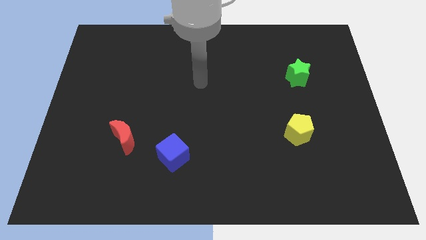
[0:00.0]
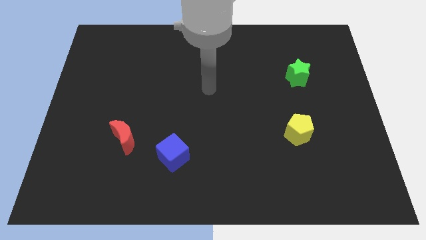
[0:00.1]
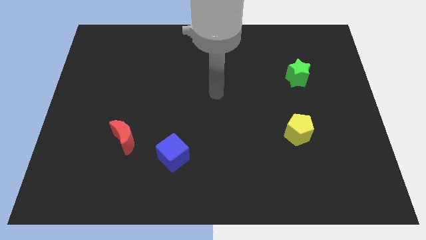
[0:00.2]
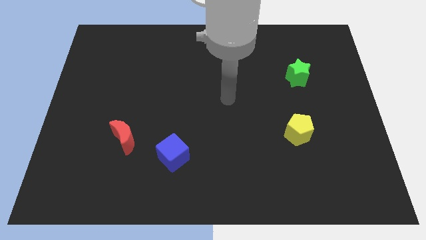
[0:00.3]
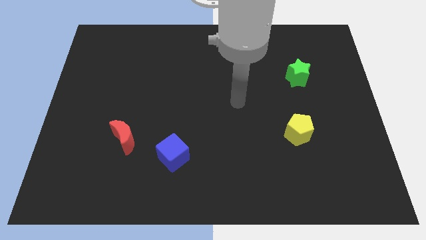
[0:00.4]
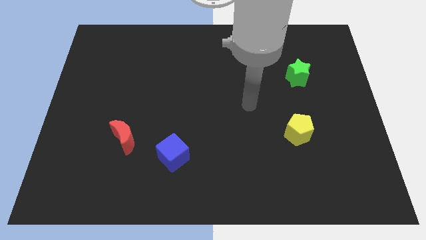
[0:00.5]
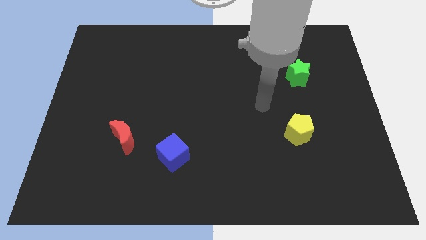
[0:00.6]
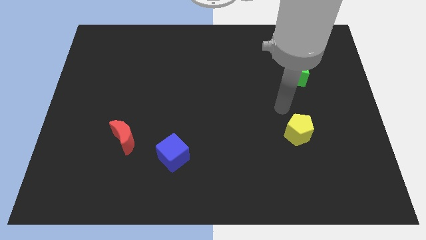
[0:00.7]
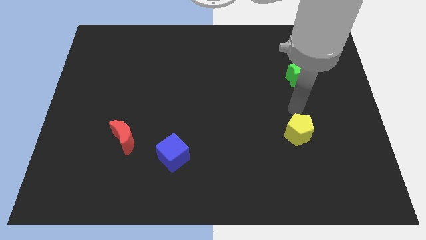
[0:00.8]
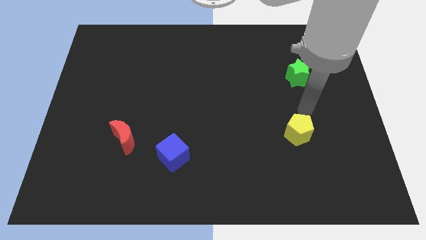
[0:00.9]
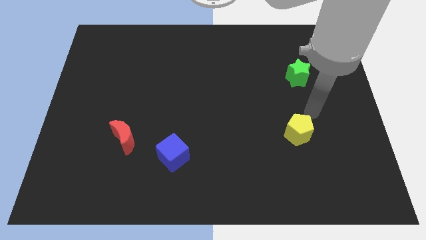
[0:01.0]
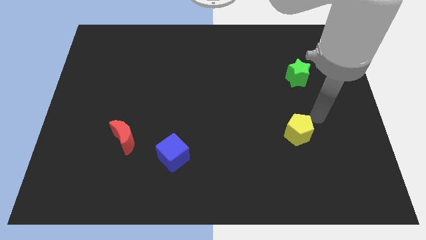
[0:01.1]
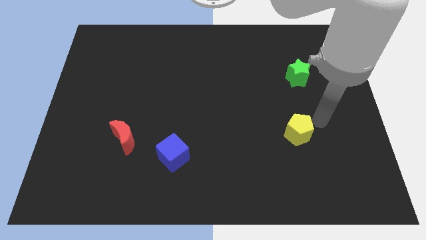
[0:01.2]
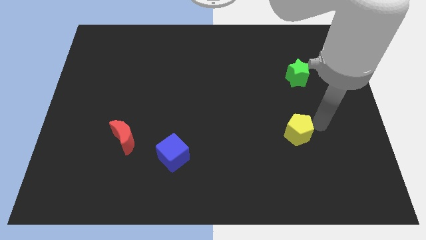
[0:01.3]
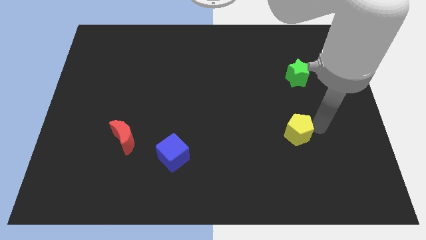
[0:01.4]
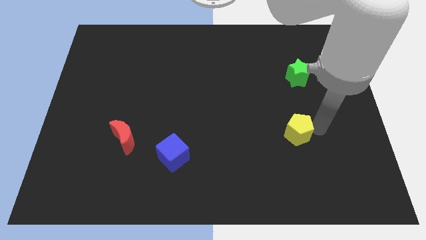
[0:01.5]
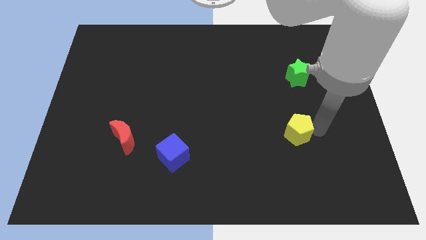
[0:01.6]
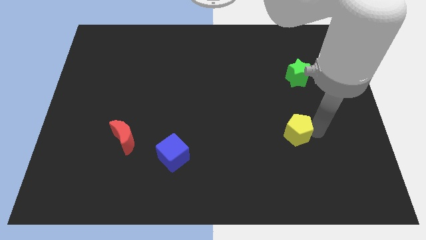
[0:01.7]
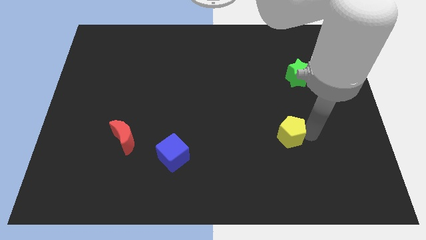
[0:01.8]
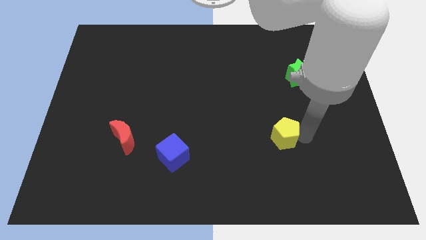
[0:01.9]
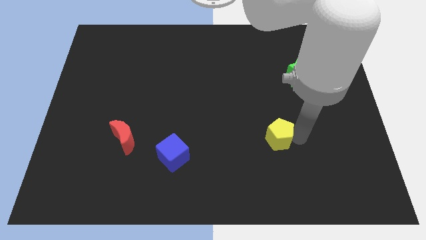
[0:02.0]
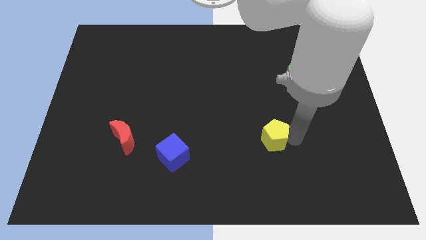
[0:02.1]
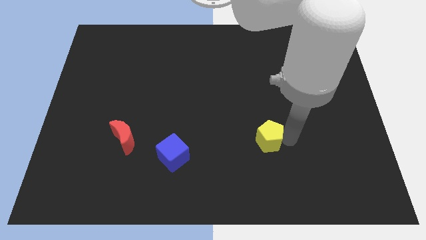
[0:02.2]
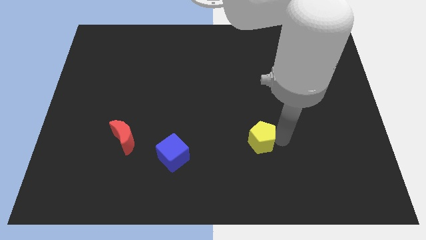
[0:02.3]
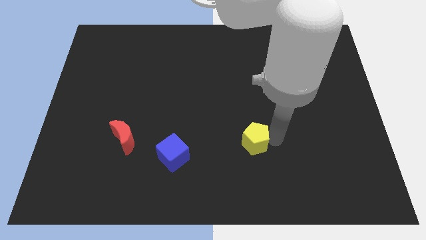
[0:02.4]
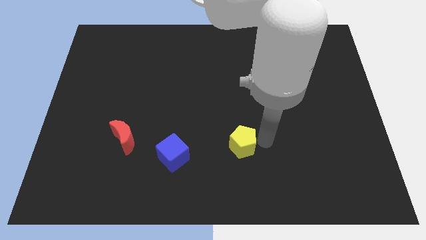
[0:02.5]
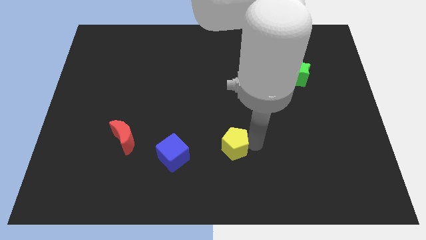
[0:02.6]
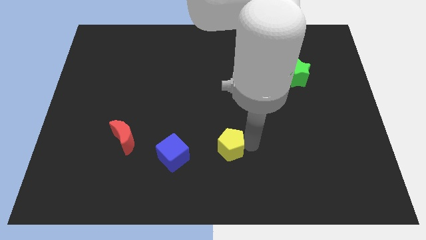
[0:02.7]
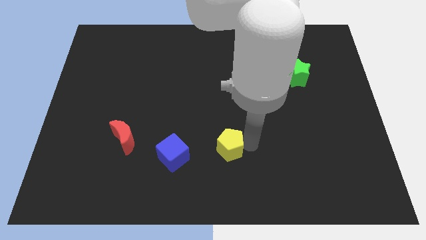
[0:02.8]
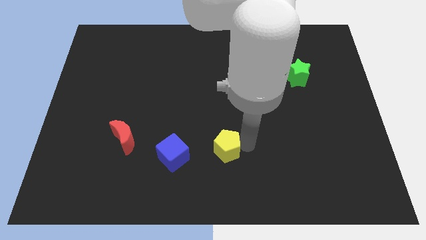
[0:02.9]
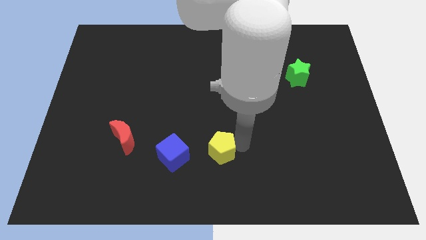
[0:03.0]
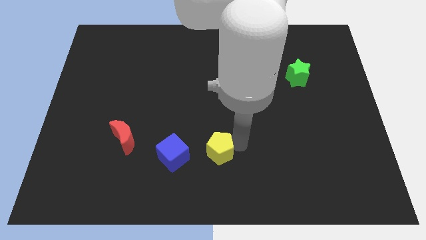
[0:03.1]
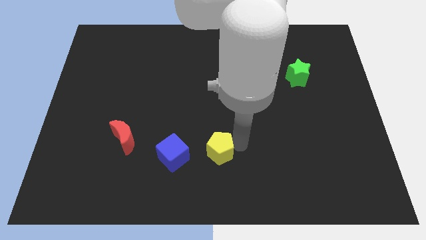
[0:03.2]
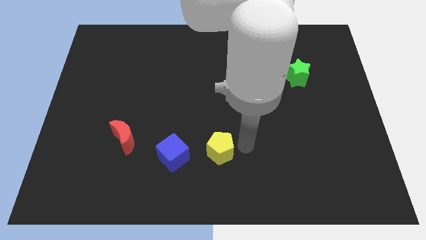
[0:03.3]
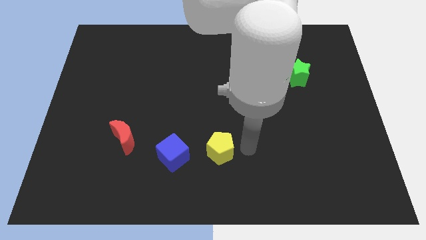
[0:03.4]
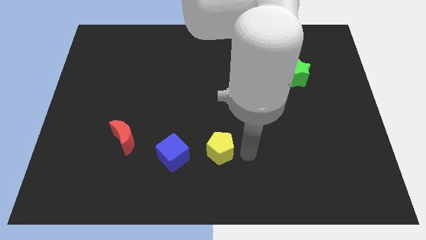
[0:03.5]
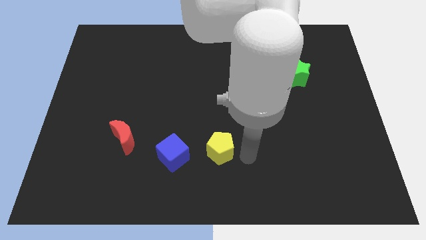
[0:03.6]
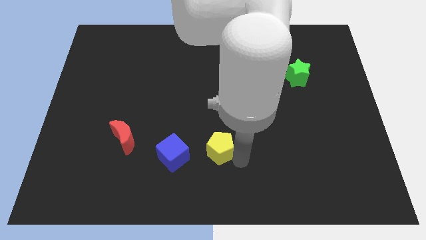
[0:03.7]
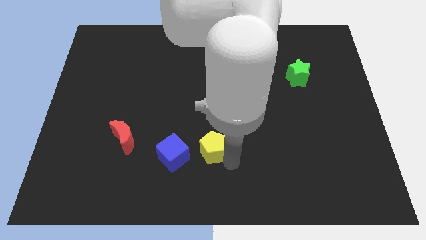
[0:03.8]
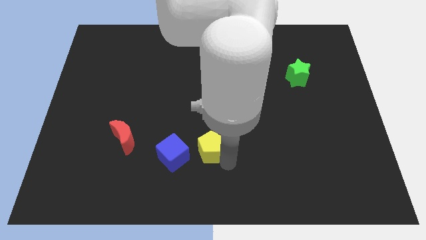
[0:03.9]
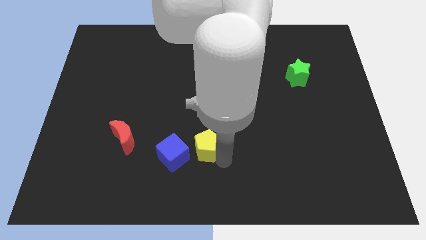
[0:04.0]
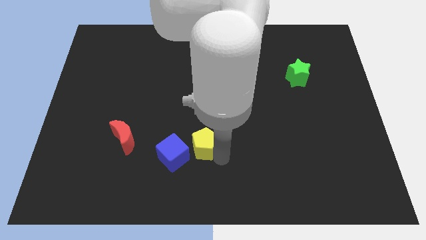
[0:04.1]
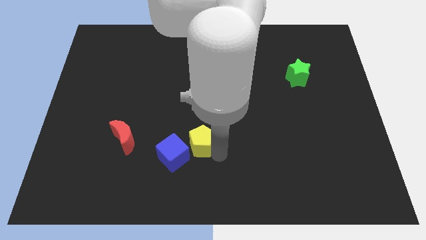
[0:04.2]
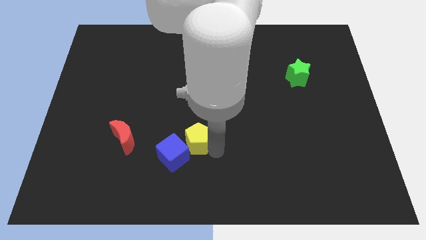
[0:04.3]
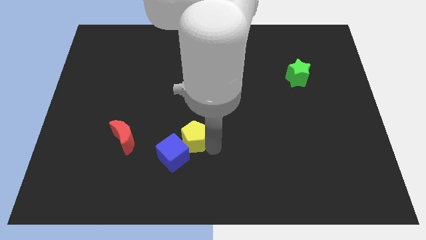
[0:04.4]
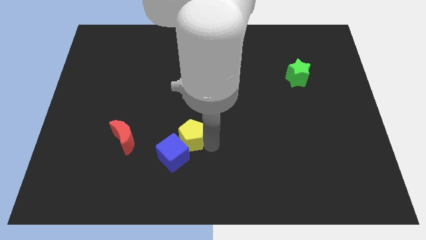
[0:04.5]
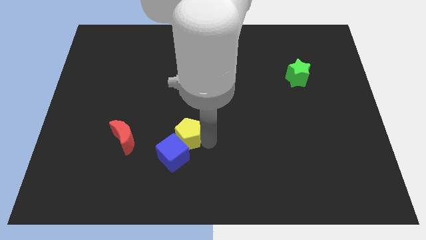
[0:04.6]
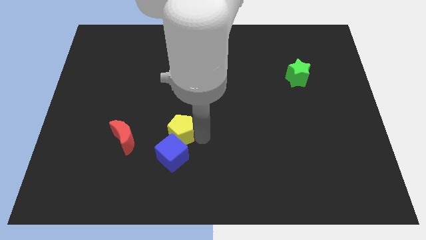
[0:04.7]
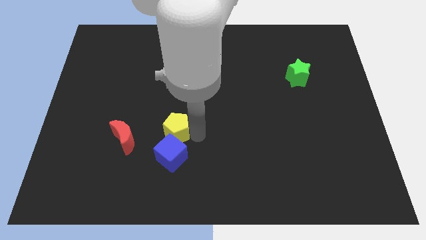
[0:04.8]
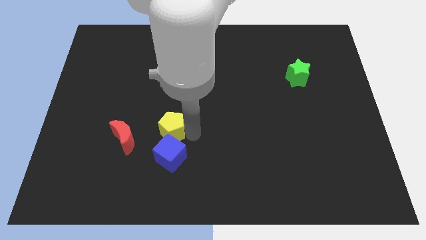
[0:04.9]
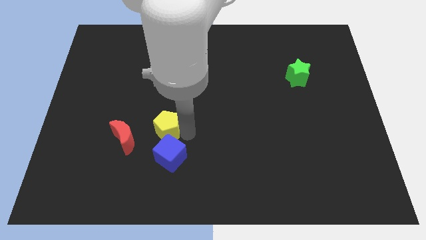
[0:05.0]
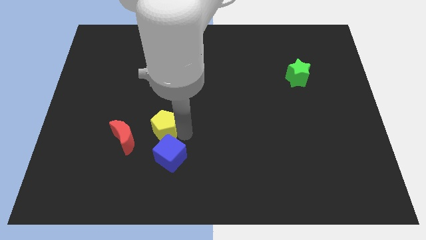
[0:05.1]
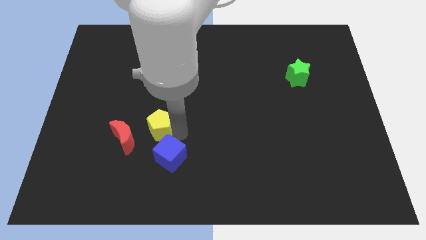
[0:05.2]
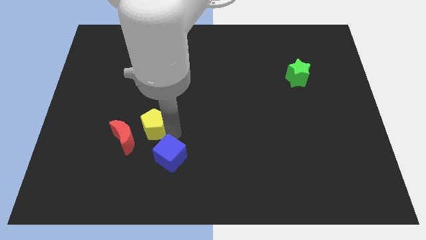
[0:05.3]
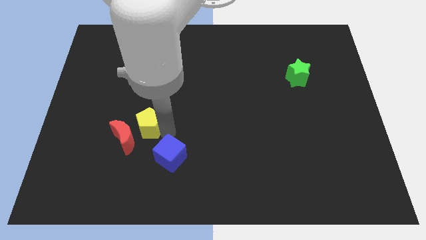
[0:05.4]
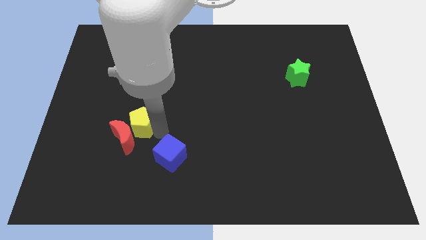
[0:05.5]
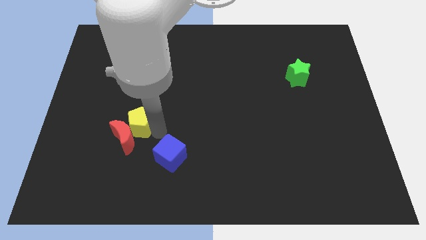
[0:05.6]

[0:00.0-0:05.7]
push the pentagon next to the red moon

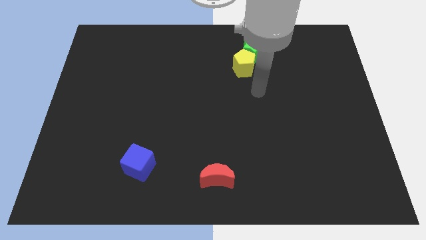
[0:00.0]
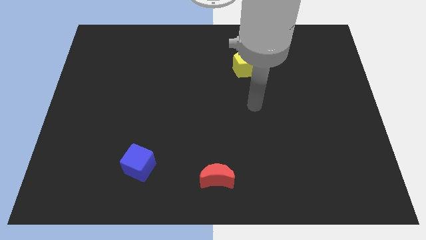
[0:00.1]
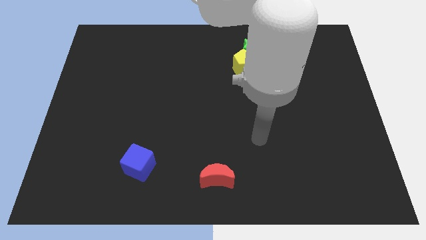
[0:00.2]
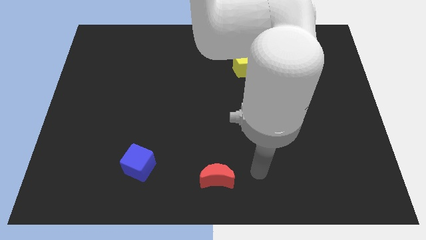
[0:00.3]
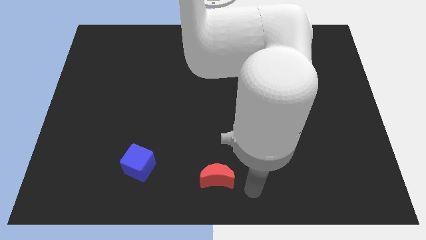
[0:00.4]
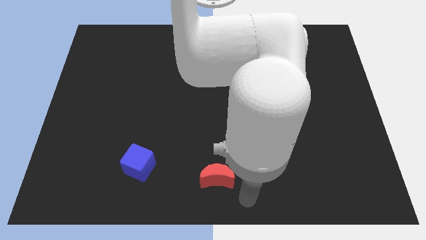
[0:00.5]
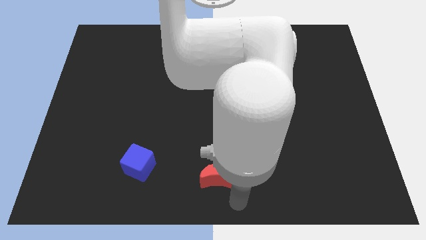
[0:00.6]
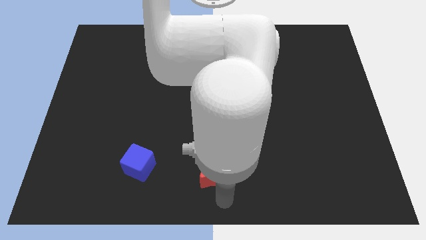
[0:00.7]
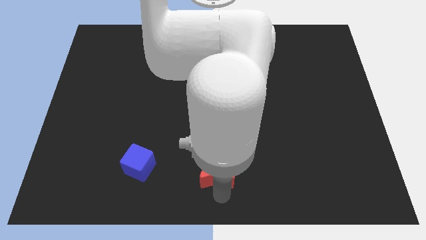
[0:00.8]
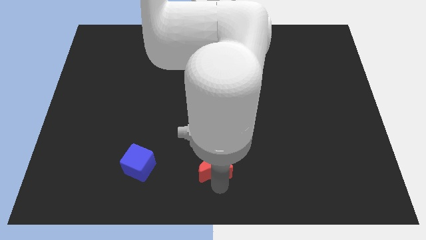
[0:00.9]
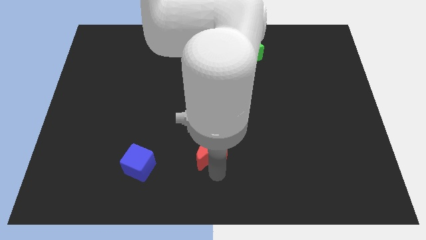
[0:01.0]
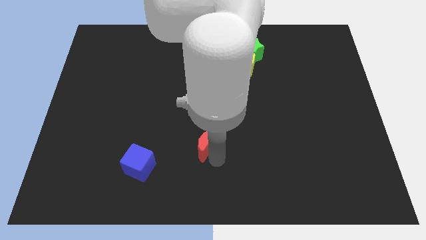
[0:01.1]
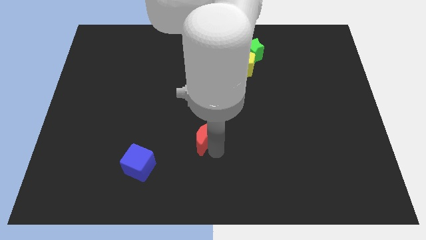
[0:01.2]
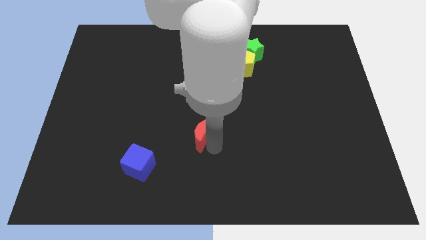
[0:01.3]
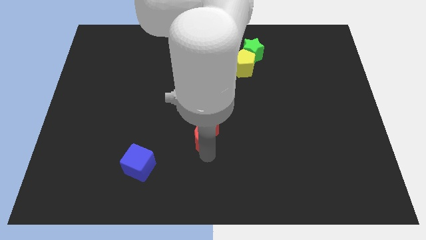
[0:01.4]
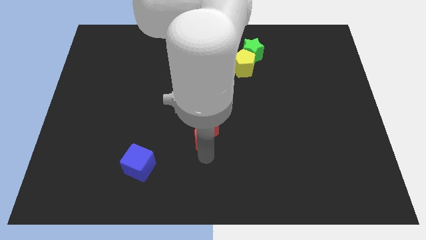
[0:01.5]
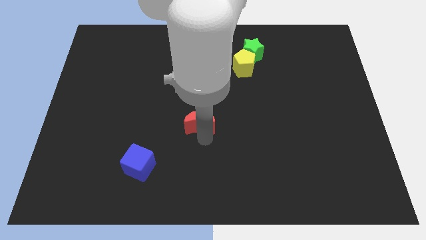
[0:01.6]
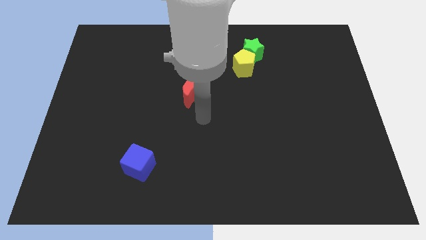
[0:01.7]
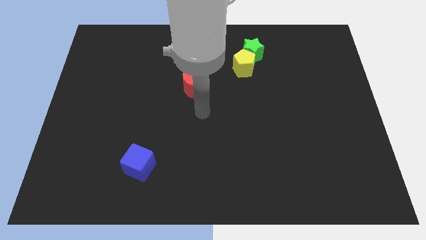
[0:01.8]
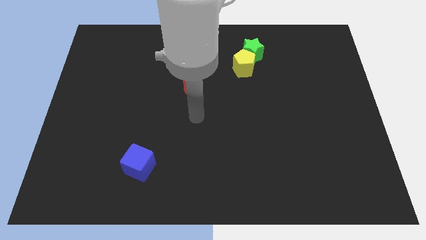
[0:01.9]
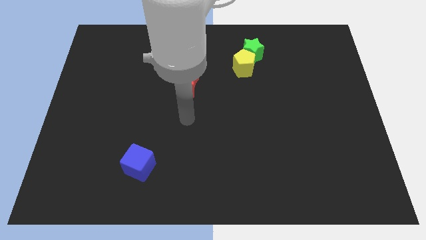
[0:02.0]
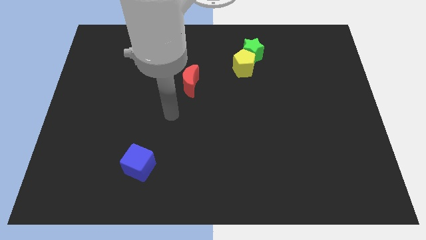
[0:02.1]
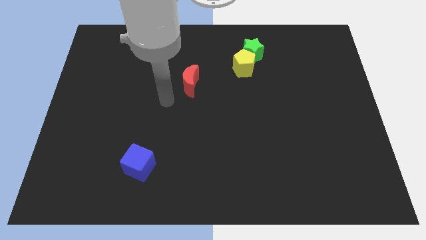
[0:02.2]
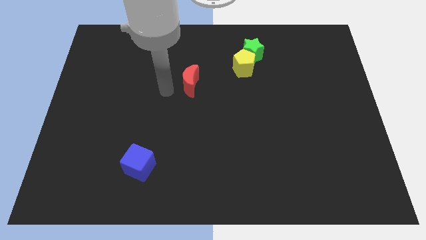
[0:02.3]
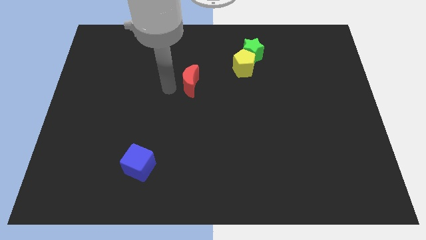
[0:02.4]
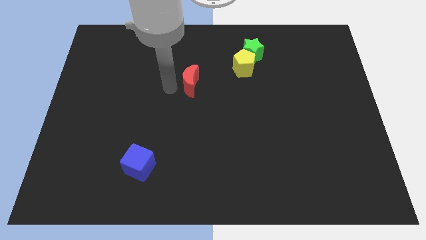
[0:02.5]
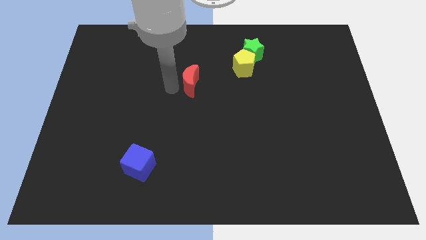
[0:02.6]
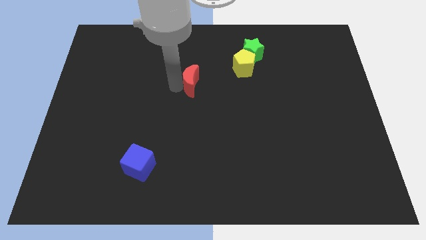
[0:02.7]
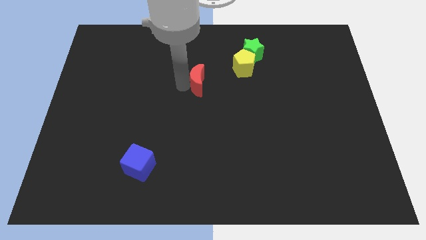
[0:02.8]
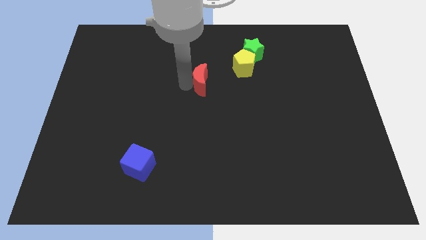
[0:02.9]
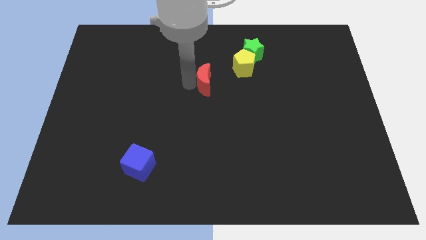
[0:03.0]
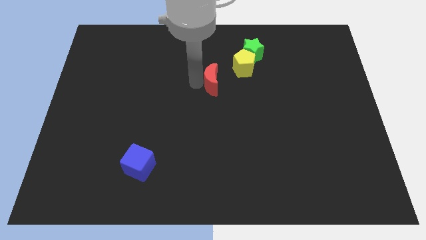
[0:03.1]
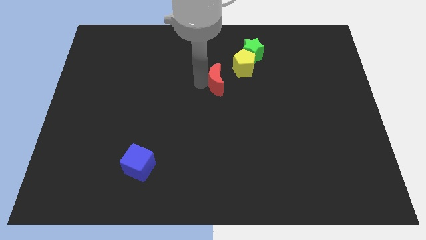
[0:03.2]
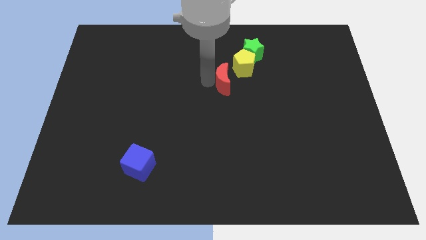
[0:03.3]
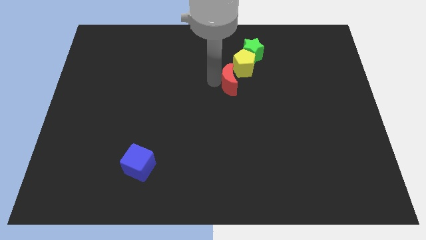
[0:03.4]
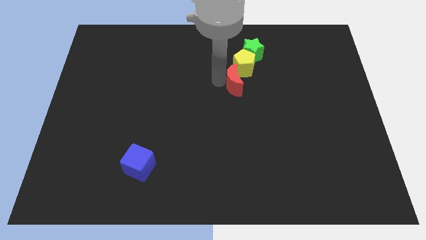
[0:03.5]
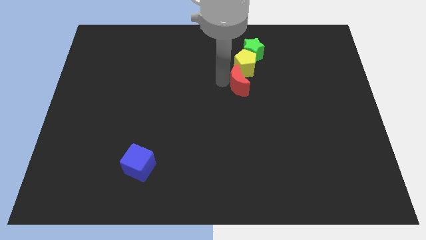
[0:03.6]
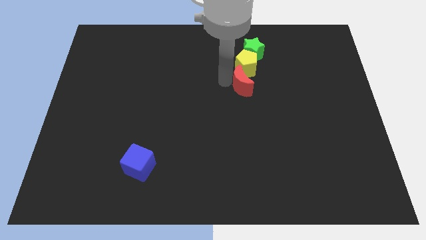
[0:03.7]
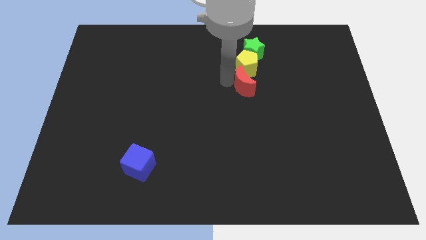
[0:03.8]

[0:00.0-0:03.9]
move the moon to the yellow pentagon
